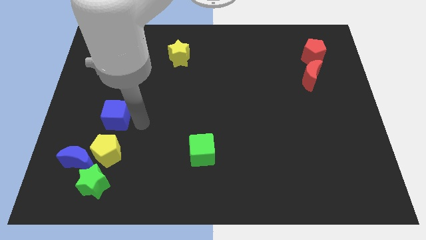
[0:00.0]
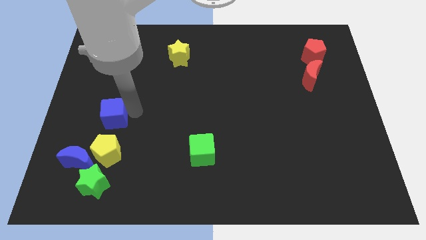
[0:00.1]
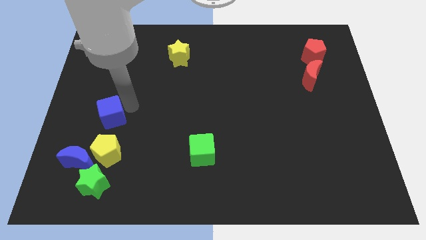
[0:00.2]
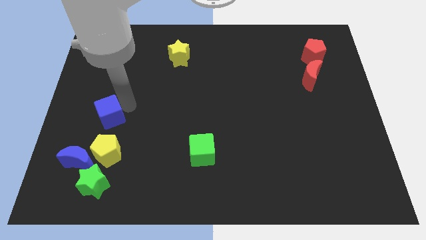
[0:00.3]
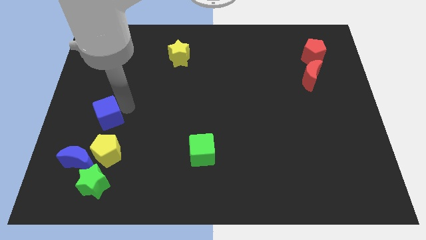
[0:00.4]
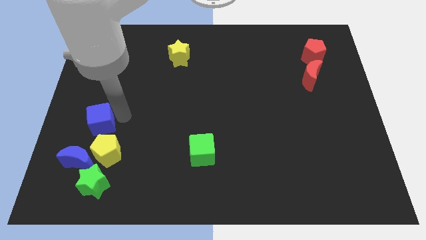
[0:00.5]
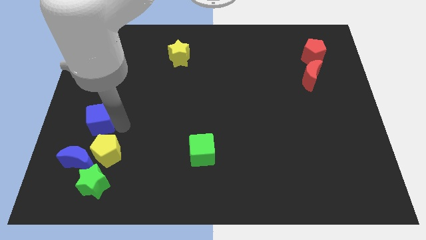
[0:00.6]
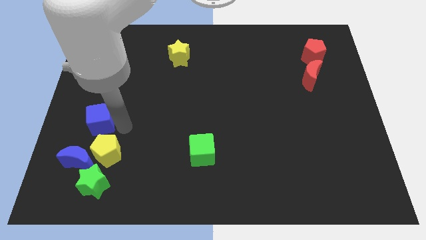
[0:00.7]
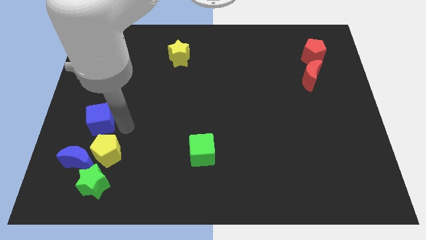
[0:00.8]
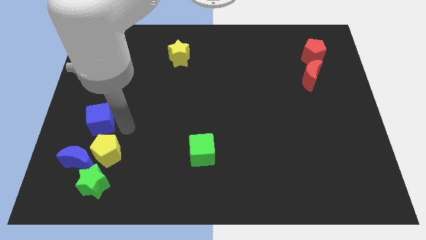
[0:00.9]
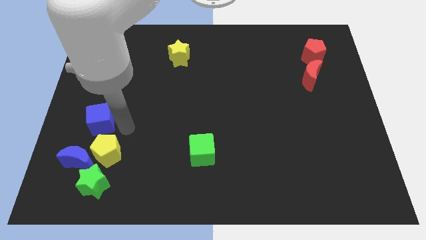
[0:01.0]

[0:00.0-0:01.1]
put blue cube above yellow pentagon

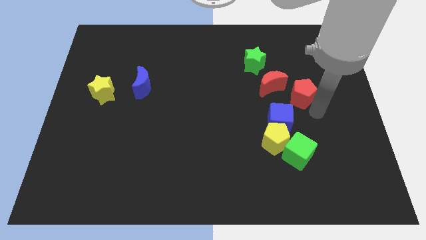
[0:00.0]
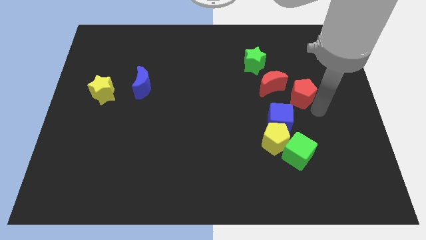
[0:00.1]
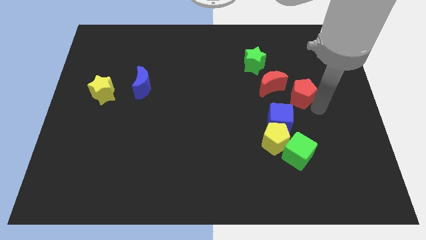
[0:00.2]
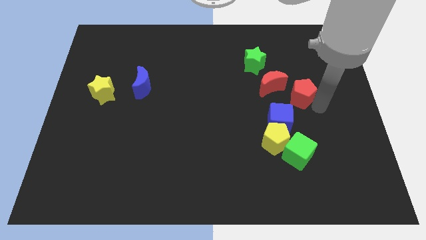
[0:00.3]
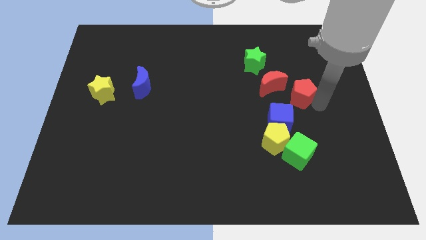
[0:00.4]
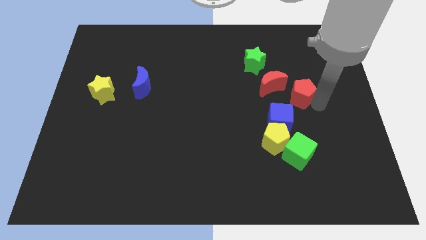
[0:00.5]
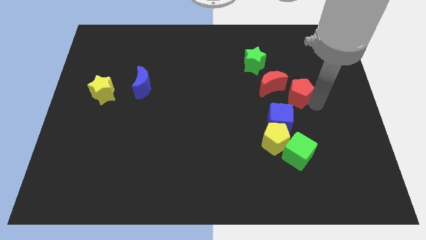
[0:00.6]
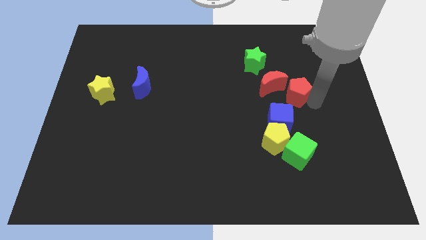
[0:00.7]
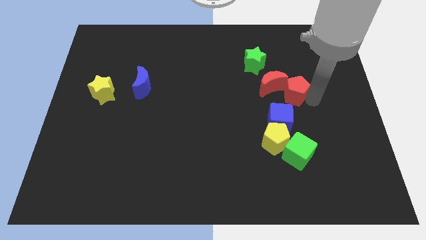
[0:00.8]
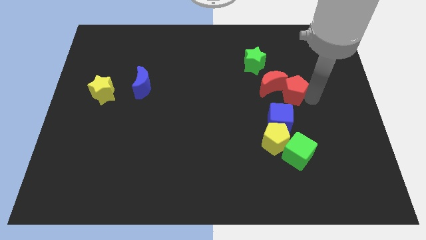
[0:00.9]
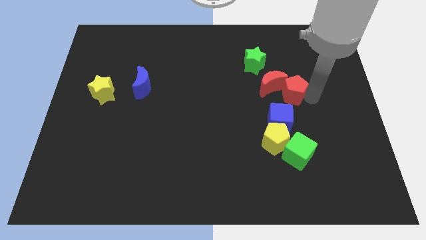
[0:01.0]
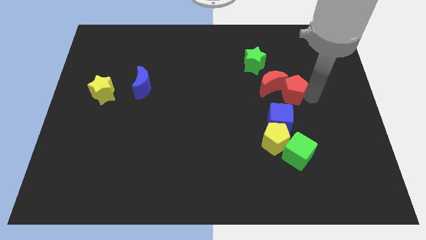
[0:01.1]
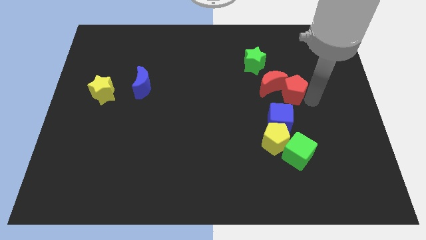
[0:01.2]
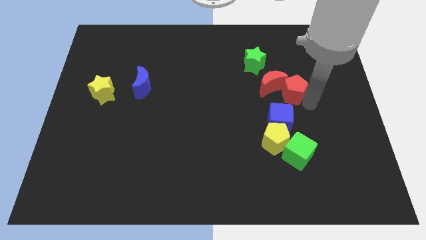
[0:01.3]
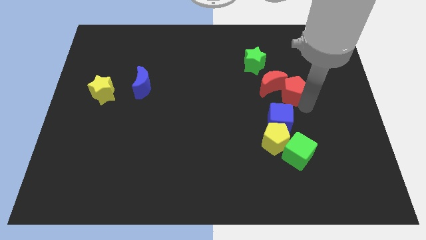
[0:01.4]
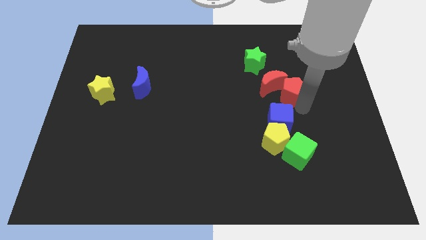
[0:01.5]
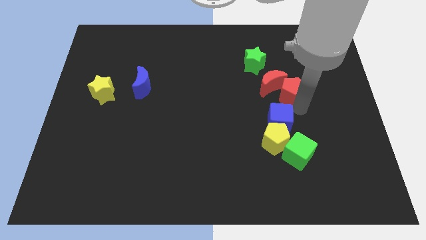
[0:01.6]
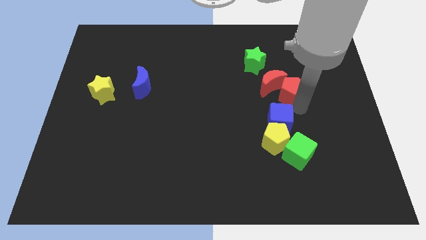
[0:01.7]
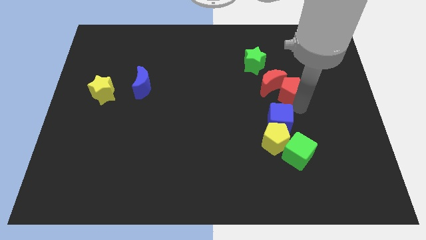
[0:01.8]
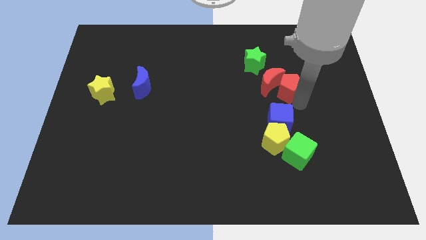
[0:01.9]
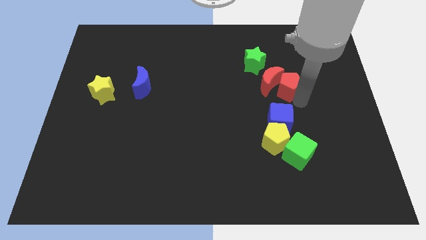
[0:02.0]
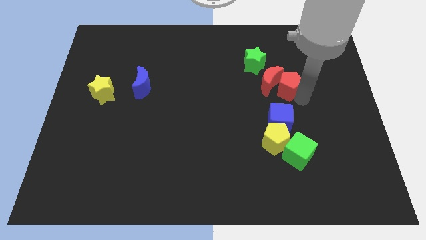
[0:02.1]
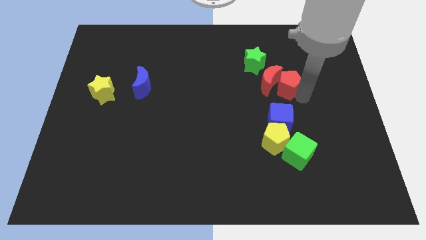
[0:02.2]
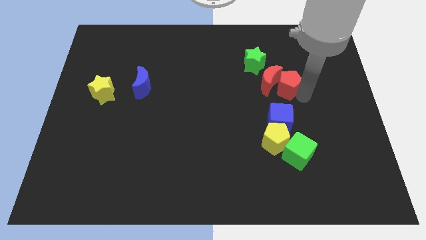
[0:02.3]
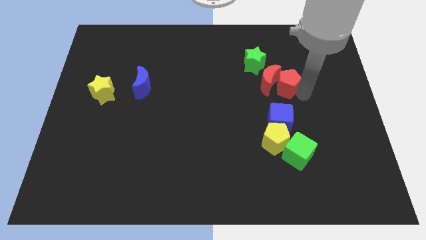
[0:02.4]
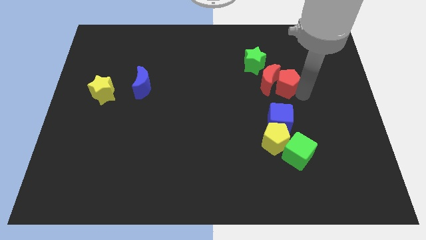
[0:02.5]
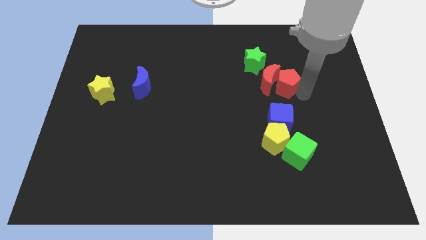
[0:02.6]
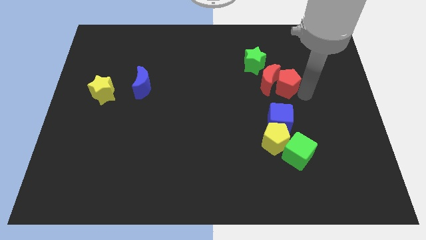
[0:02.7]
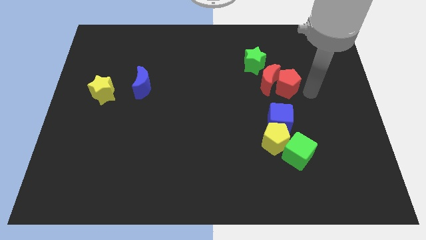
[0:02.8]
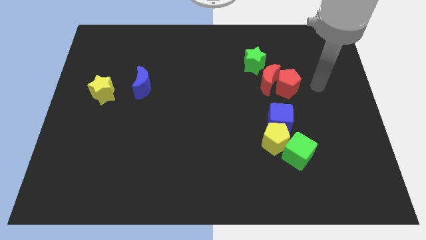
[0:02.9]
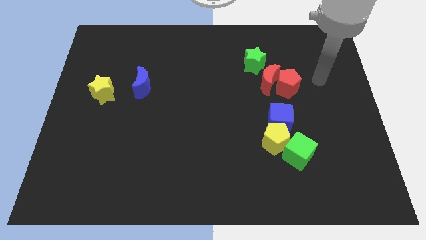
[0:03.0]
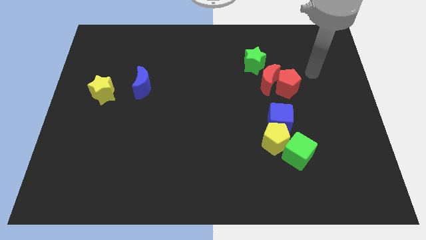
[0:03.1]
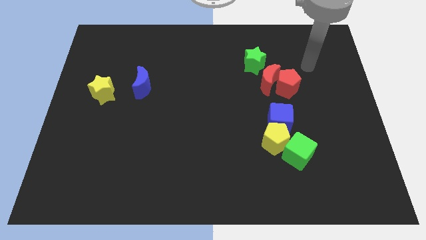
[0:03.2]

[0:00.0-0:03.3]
move red pentagon into the red crescent

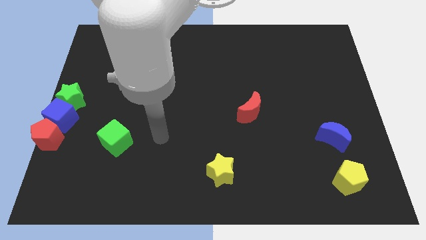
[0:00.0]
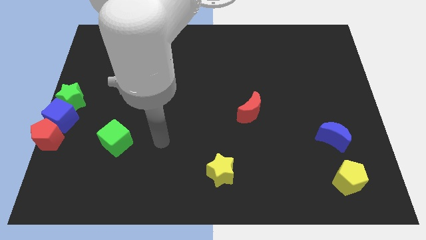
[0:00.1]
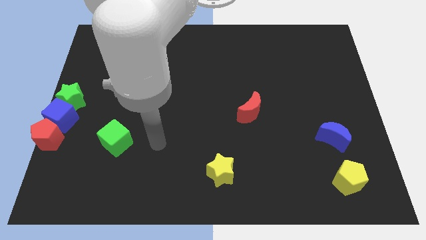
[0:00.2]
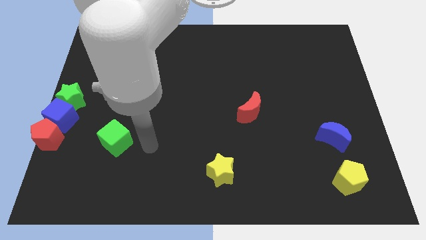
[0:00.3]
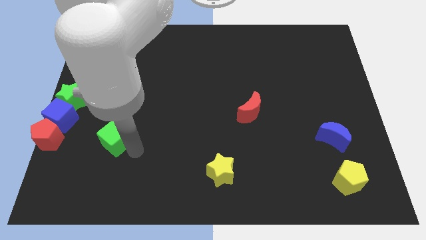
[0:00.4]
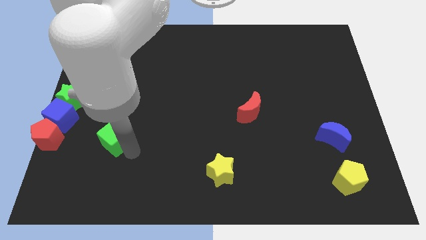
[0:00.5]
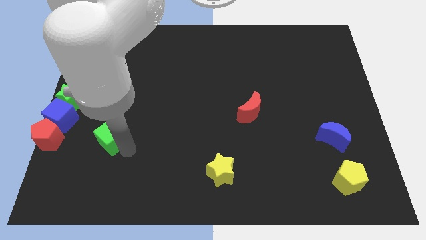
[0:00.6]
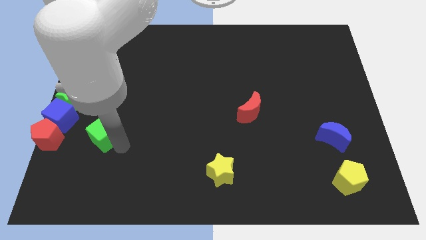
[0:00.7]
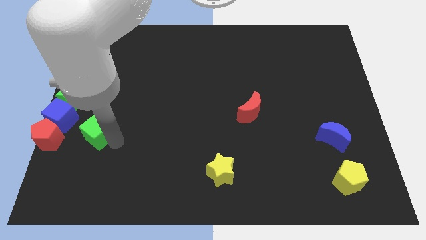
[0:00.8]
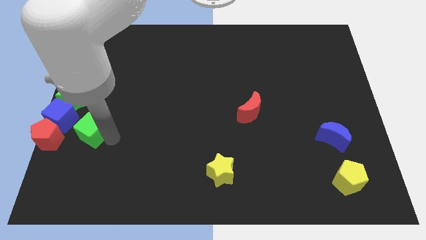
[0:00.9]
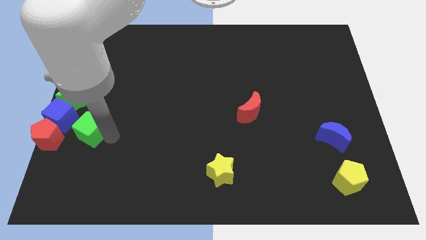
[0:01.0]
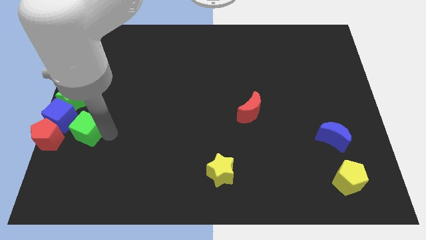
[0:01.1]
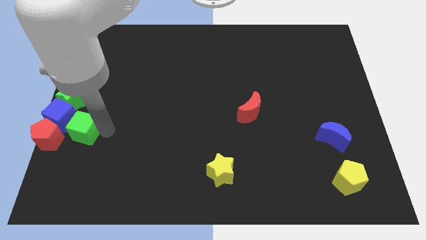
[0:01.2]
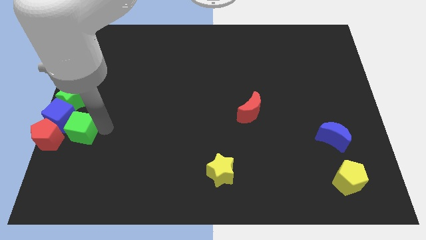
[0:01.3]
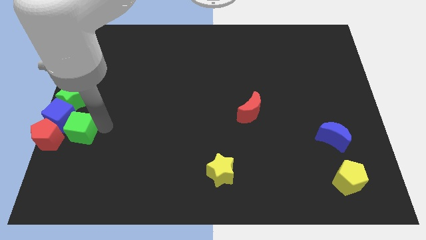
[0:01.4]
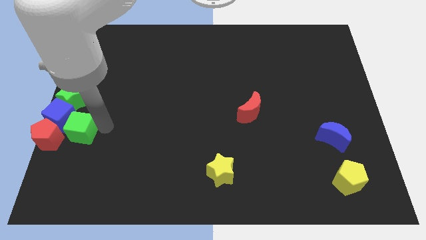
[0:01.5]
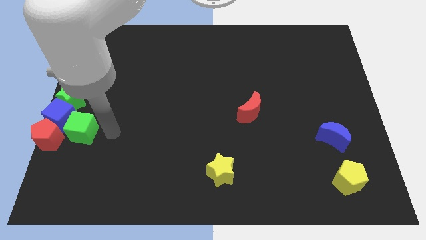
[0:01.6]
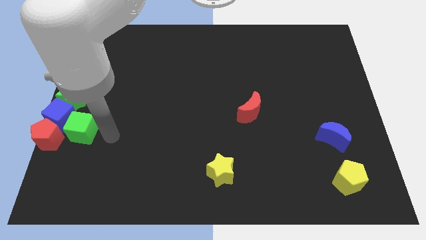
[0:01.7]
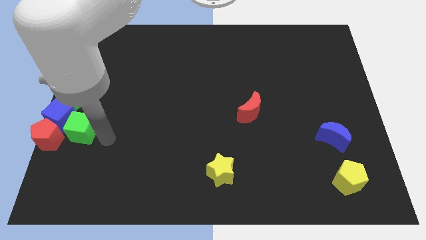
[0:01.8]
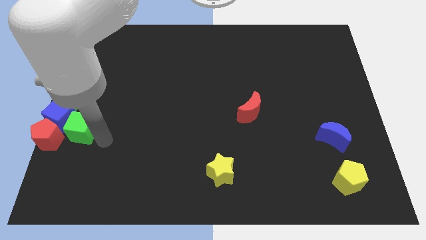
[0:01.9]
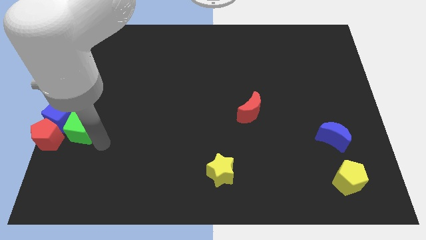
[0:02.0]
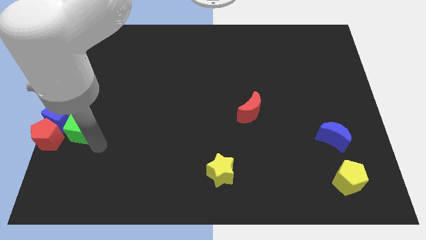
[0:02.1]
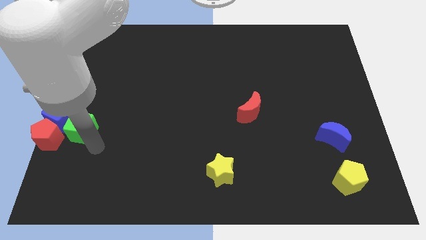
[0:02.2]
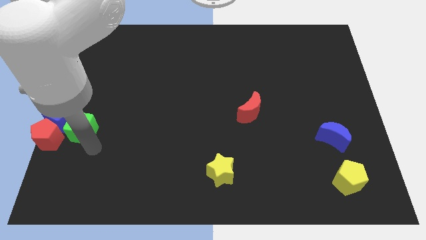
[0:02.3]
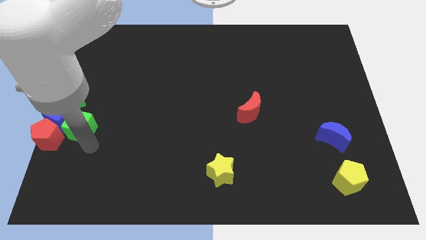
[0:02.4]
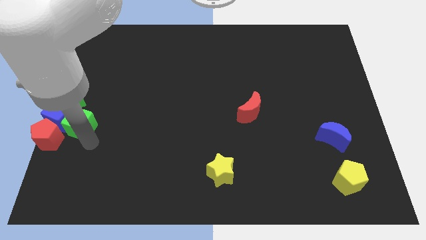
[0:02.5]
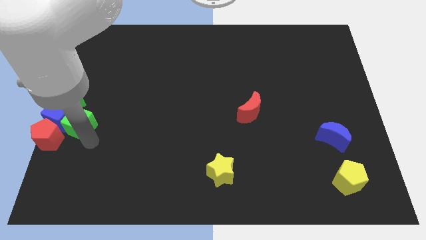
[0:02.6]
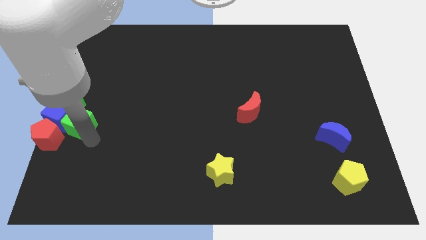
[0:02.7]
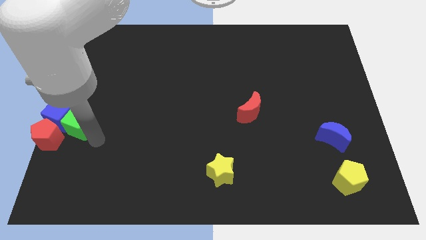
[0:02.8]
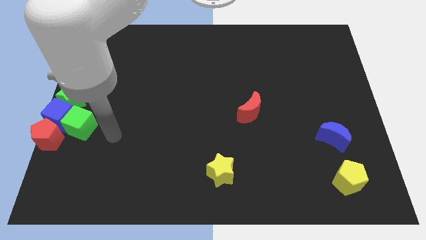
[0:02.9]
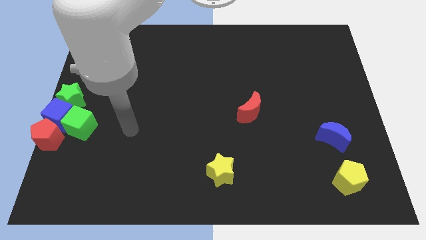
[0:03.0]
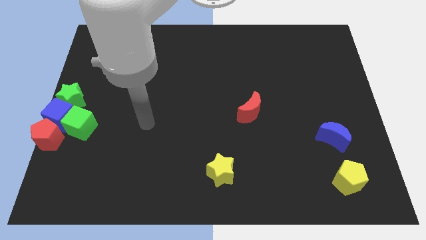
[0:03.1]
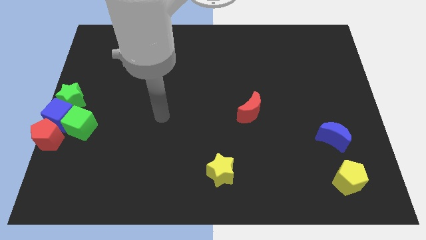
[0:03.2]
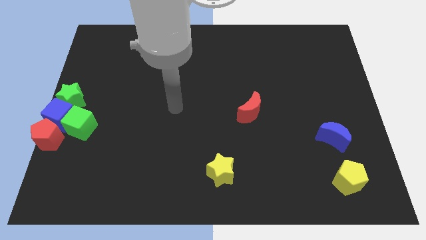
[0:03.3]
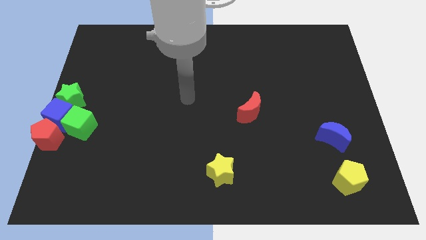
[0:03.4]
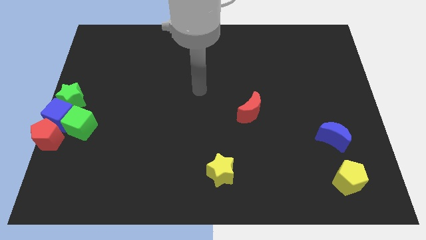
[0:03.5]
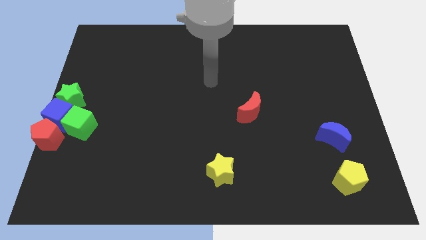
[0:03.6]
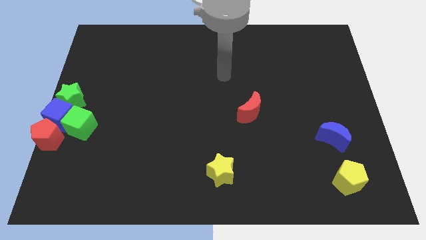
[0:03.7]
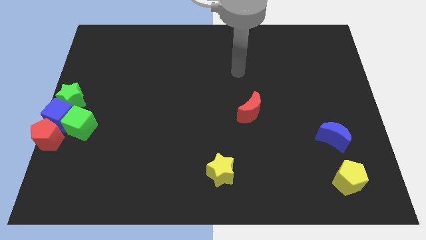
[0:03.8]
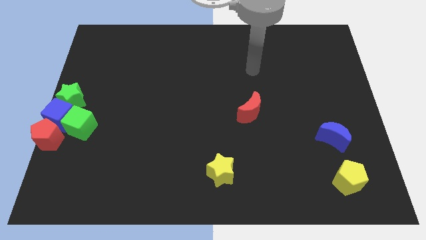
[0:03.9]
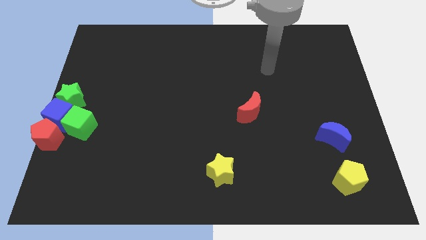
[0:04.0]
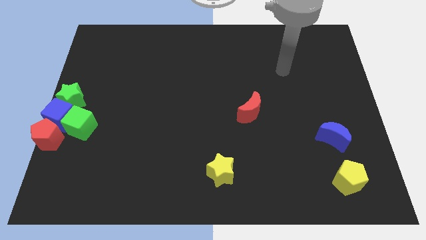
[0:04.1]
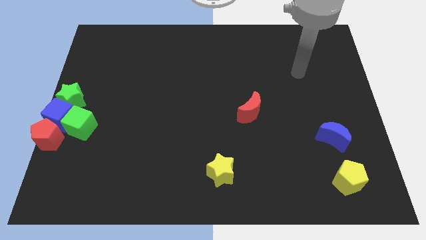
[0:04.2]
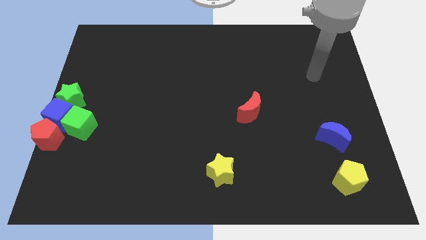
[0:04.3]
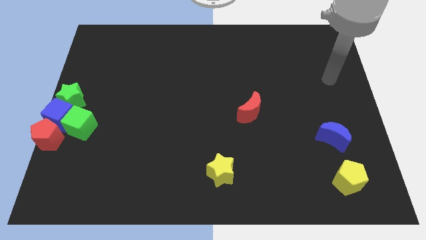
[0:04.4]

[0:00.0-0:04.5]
move green cube close to the blue cube

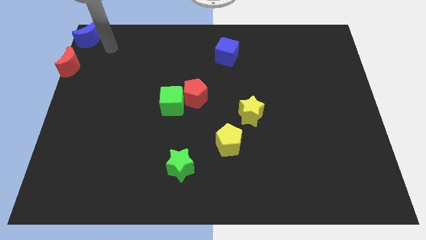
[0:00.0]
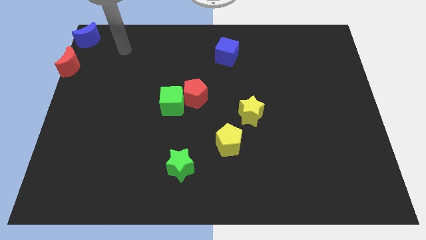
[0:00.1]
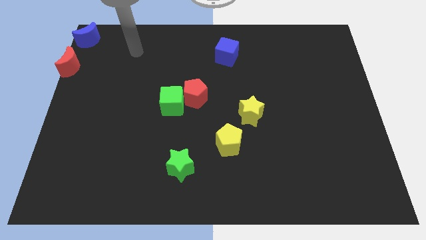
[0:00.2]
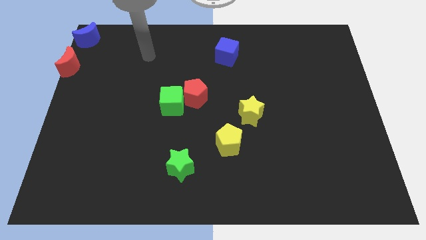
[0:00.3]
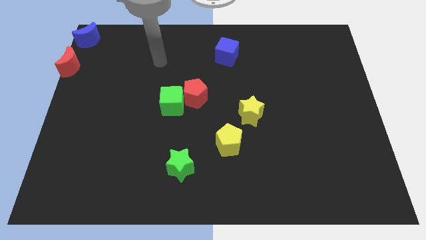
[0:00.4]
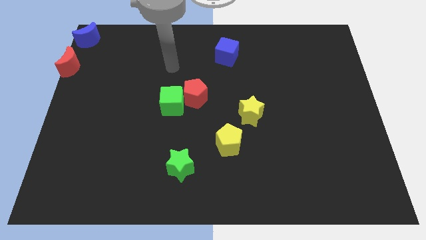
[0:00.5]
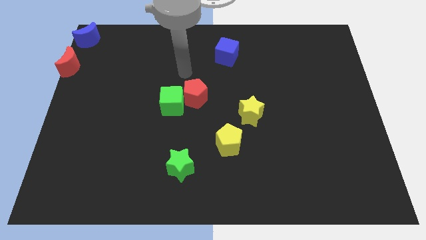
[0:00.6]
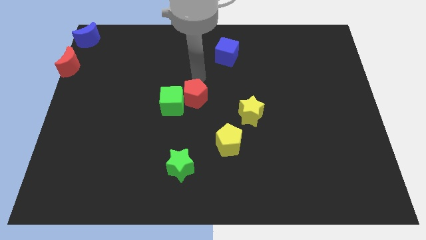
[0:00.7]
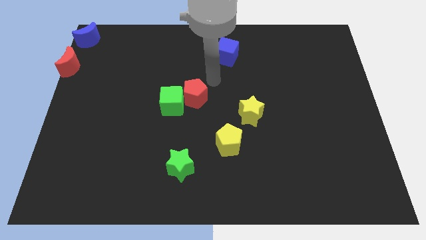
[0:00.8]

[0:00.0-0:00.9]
move your arm away from blue moon
